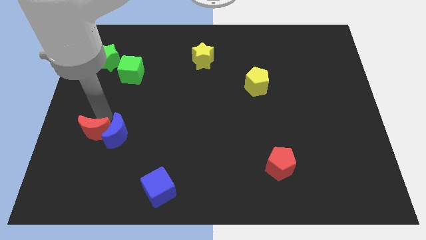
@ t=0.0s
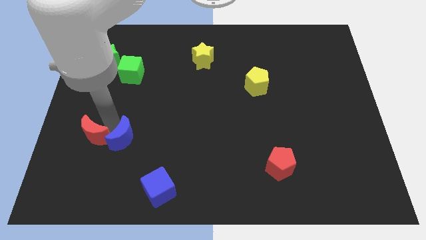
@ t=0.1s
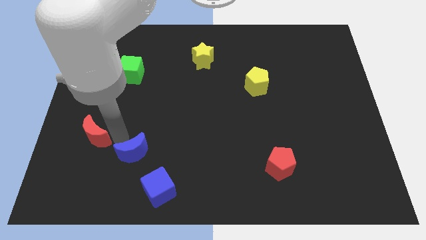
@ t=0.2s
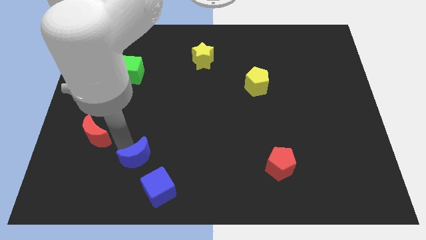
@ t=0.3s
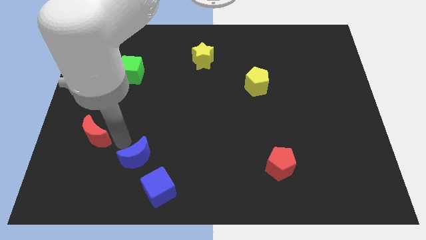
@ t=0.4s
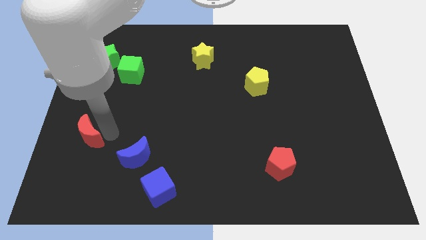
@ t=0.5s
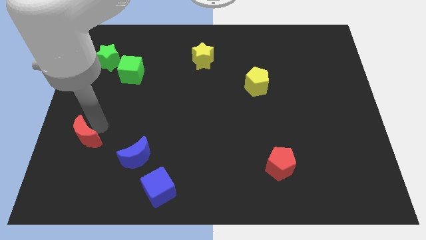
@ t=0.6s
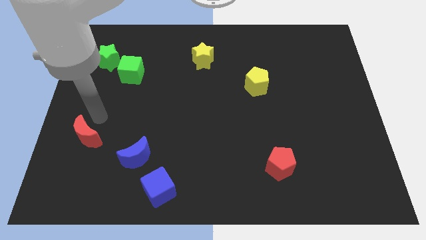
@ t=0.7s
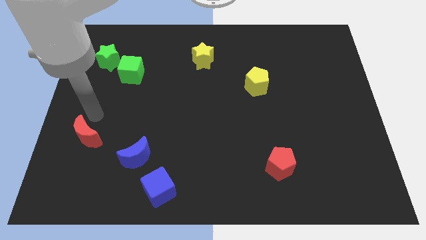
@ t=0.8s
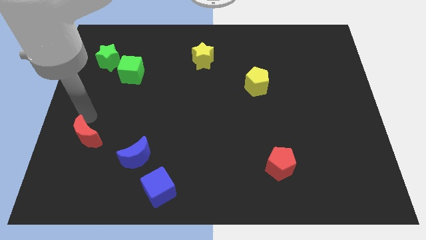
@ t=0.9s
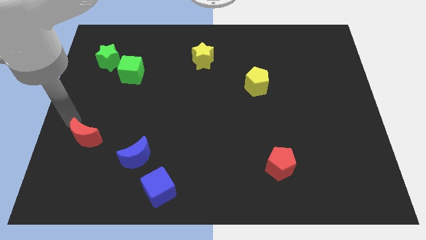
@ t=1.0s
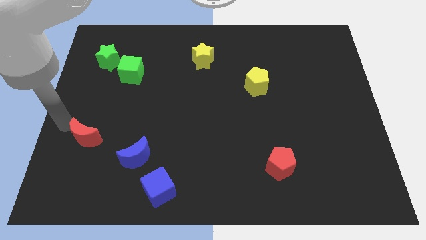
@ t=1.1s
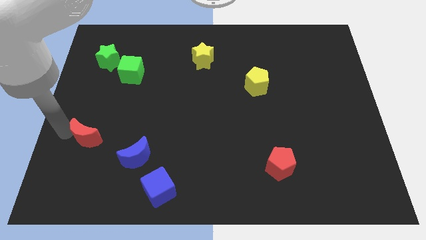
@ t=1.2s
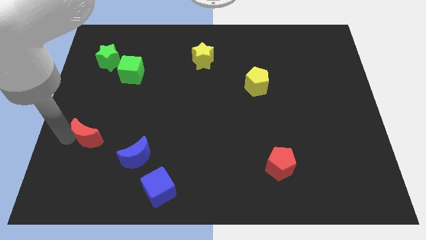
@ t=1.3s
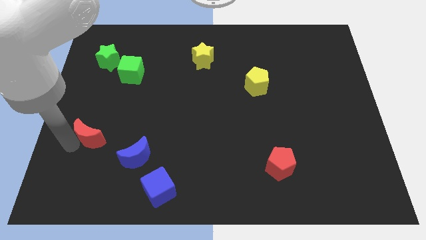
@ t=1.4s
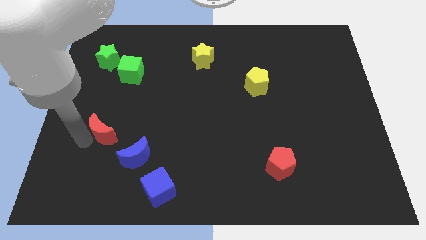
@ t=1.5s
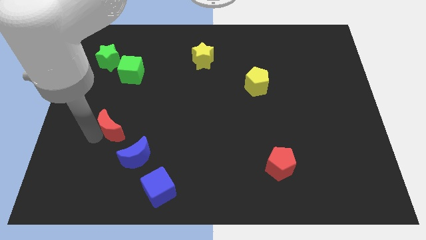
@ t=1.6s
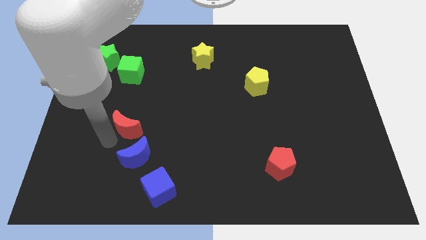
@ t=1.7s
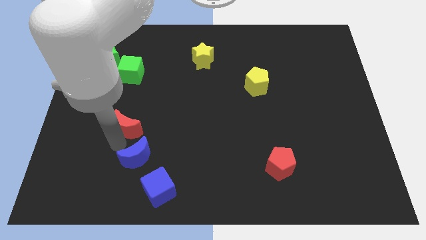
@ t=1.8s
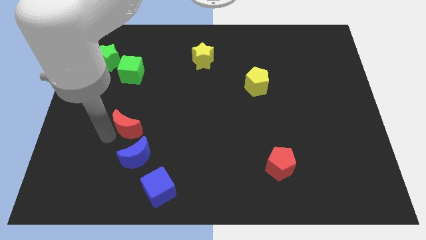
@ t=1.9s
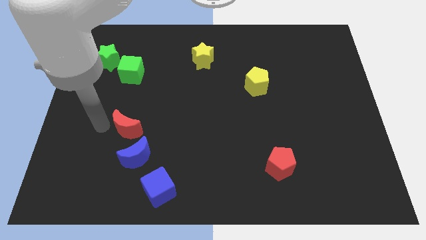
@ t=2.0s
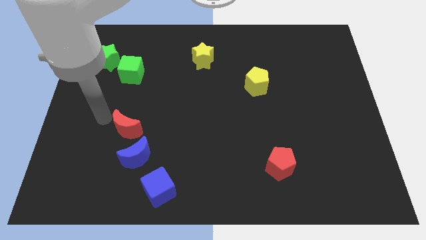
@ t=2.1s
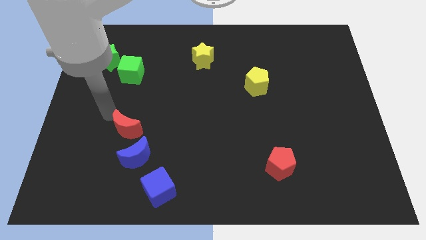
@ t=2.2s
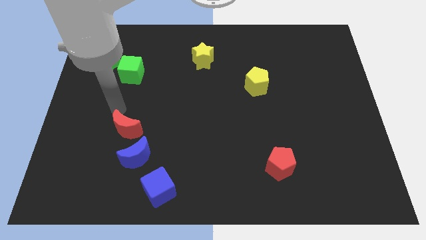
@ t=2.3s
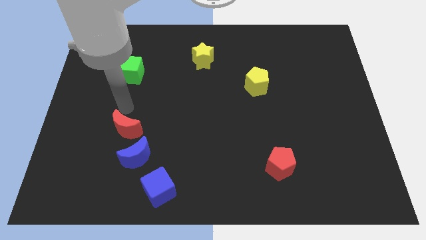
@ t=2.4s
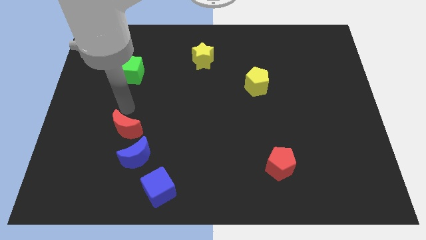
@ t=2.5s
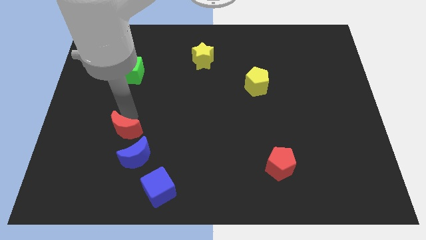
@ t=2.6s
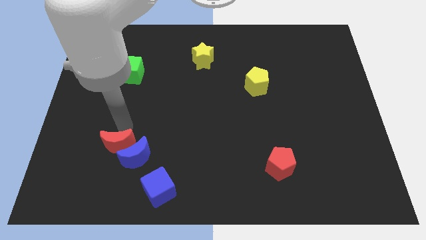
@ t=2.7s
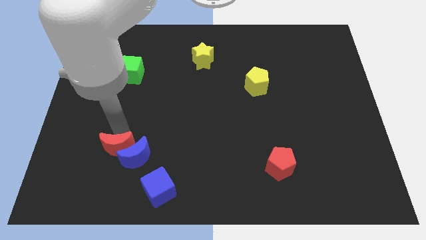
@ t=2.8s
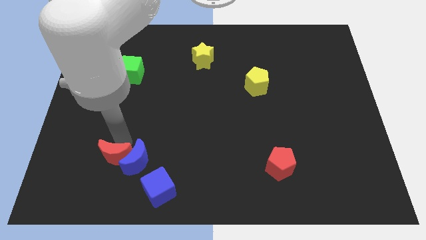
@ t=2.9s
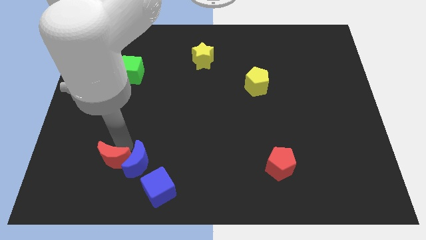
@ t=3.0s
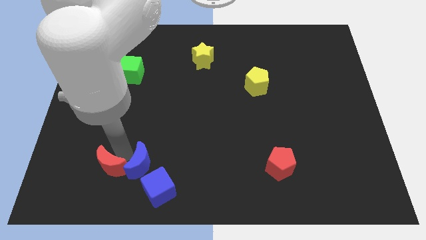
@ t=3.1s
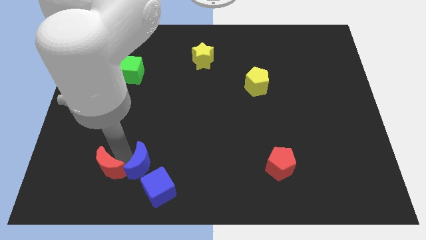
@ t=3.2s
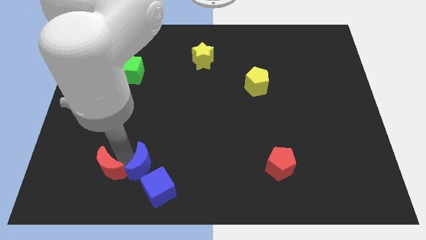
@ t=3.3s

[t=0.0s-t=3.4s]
move the blue crescent and the red moon towards the bottom

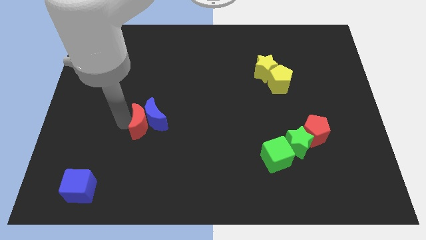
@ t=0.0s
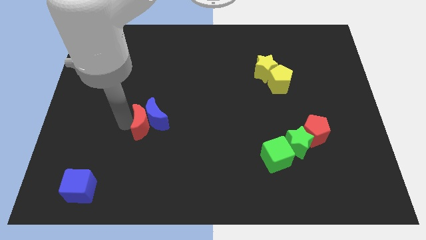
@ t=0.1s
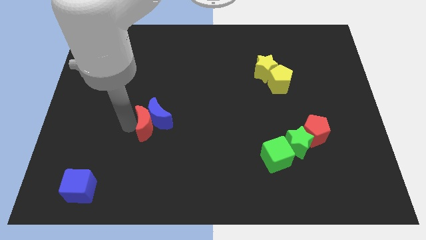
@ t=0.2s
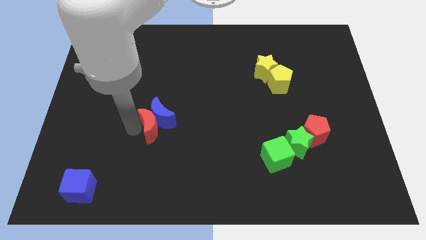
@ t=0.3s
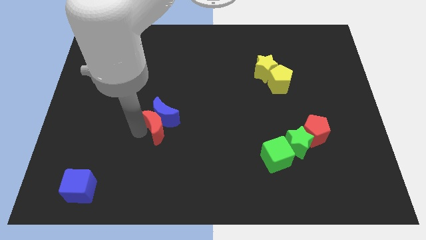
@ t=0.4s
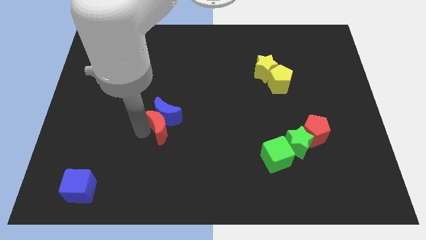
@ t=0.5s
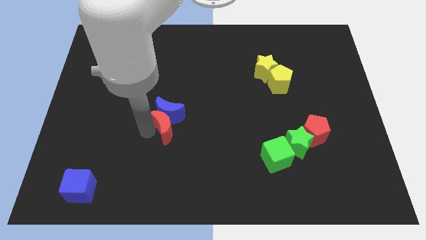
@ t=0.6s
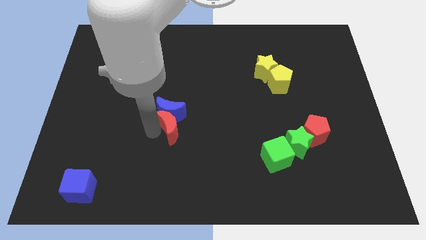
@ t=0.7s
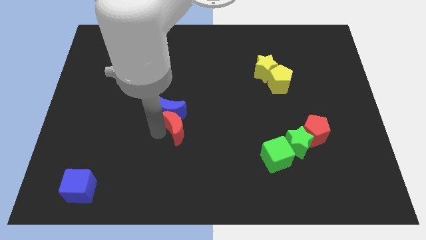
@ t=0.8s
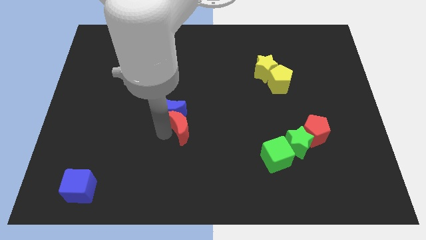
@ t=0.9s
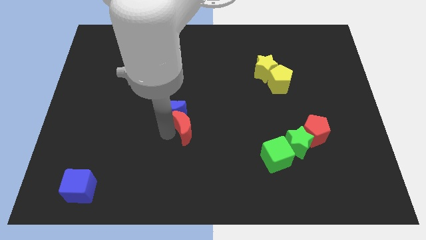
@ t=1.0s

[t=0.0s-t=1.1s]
move the red and blue moon towards center

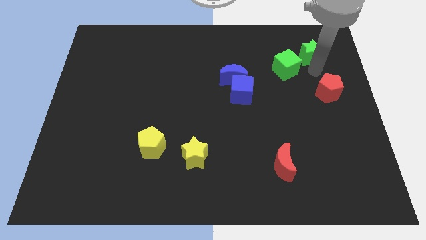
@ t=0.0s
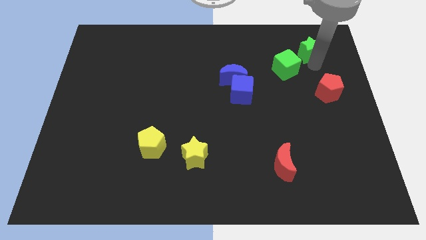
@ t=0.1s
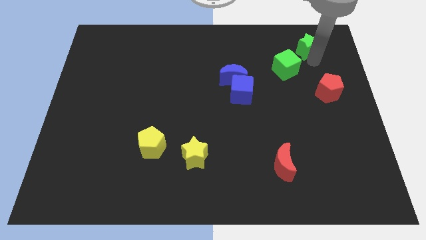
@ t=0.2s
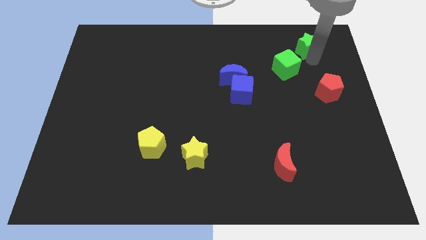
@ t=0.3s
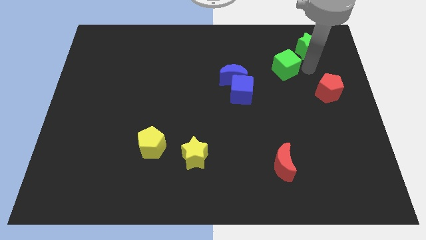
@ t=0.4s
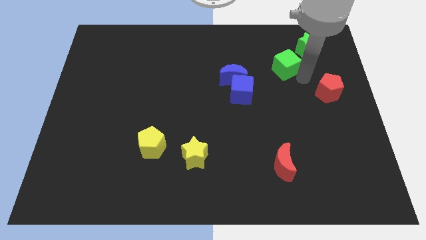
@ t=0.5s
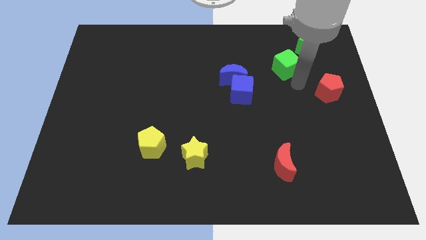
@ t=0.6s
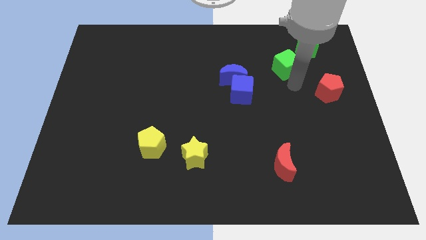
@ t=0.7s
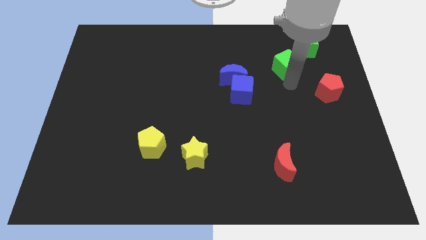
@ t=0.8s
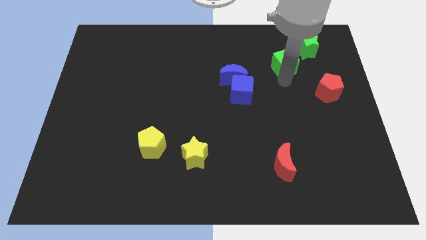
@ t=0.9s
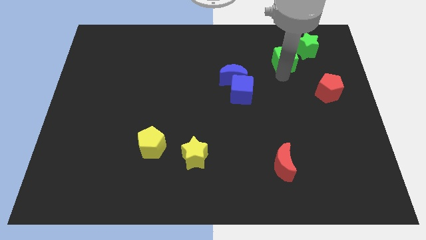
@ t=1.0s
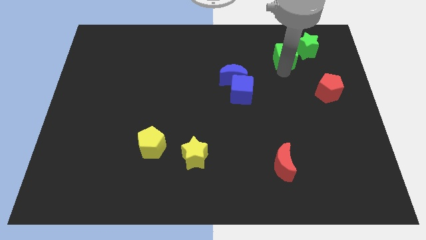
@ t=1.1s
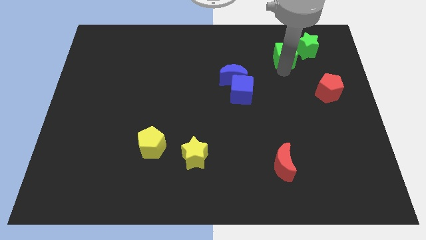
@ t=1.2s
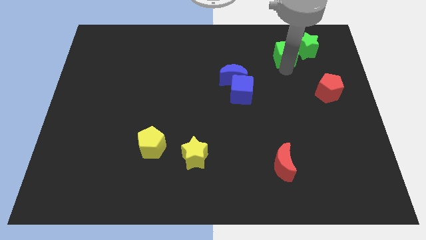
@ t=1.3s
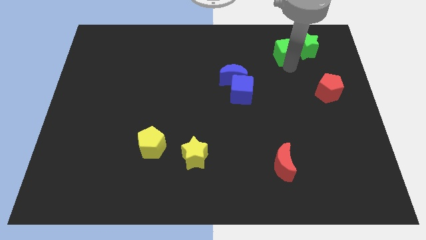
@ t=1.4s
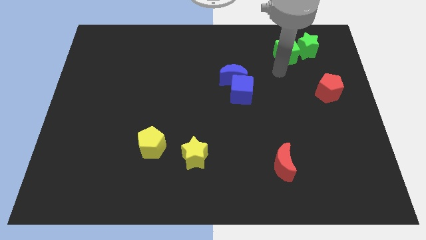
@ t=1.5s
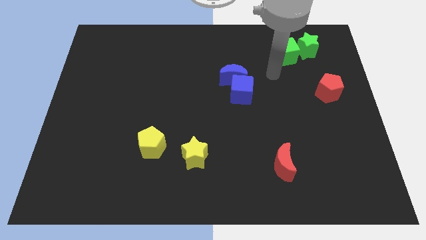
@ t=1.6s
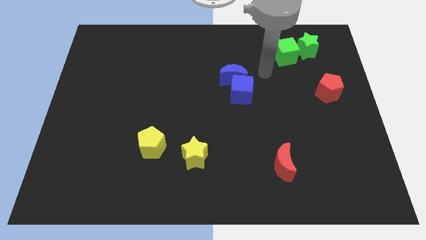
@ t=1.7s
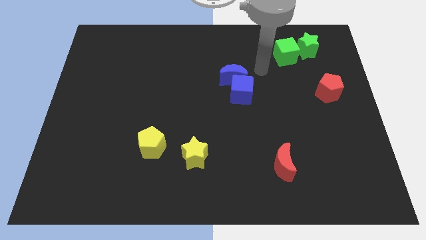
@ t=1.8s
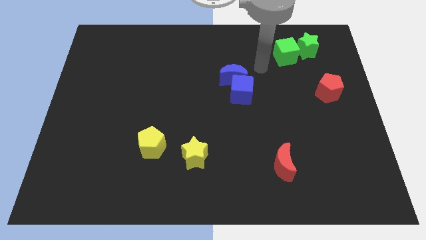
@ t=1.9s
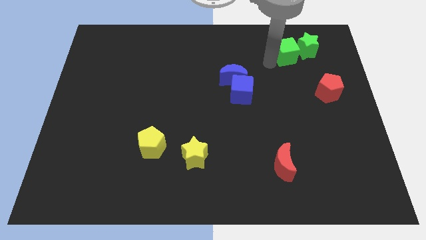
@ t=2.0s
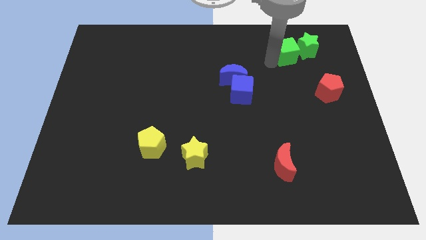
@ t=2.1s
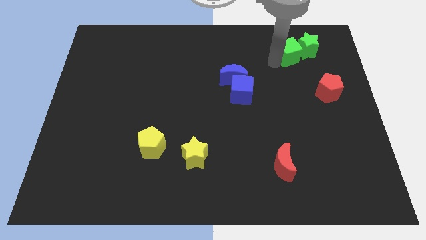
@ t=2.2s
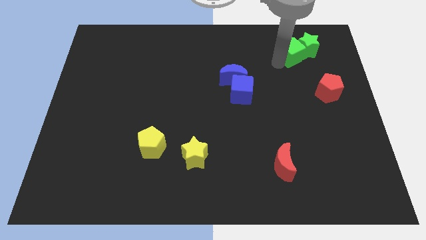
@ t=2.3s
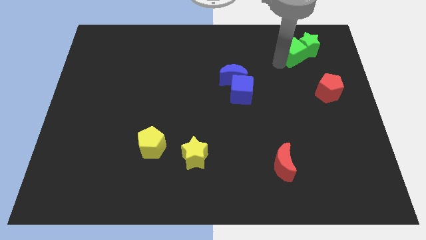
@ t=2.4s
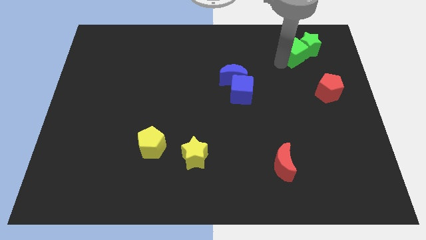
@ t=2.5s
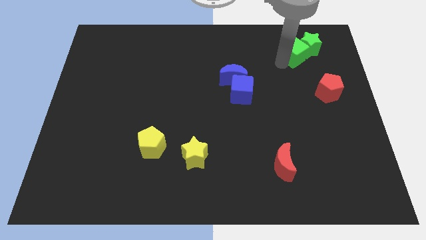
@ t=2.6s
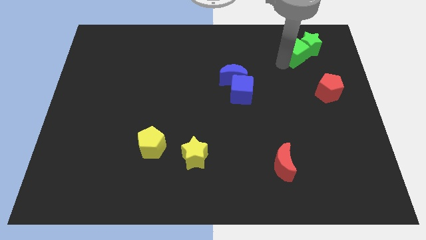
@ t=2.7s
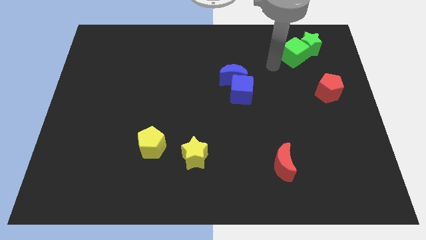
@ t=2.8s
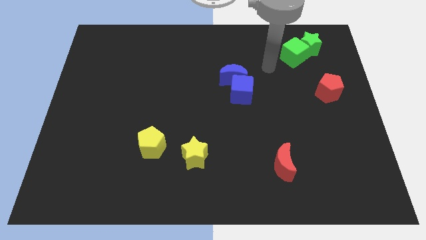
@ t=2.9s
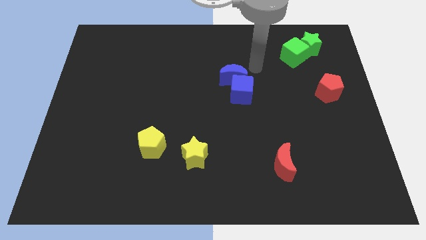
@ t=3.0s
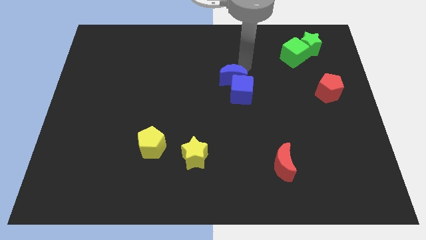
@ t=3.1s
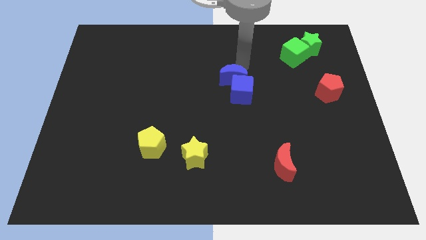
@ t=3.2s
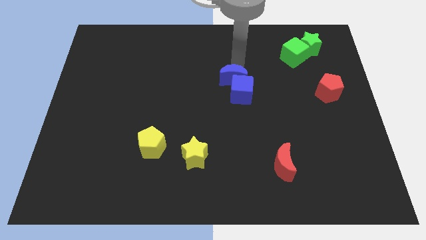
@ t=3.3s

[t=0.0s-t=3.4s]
push the green cube and green star to the top of the board

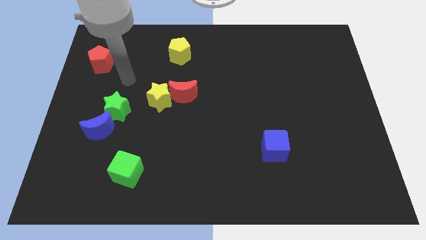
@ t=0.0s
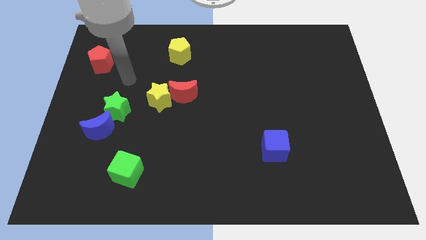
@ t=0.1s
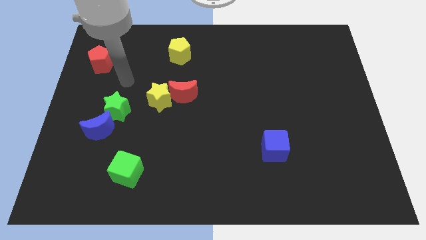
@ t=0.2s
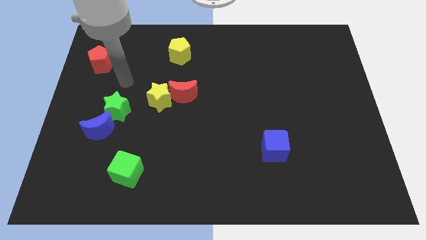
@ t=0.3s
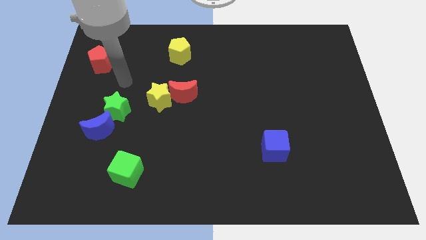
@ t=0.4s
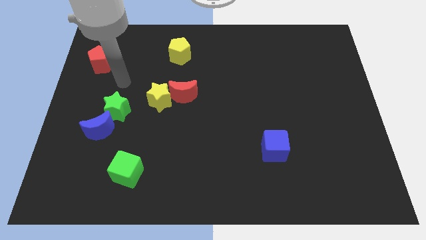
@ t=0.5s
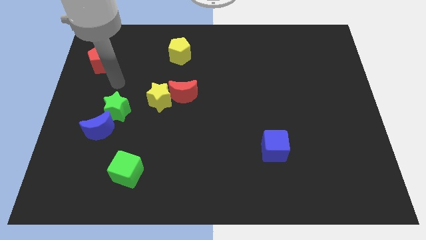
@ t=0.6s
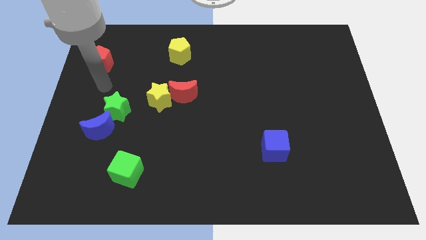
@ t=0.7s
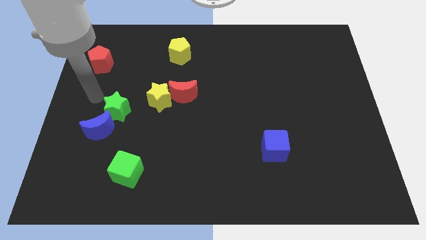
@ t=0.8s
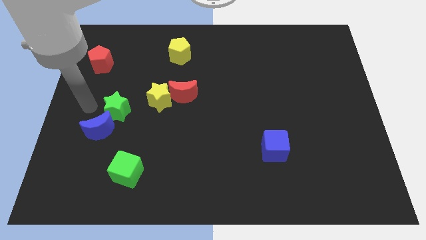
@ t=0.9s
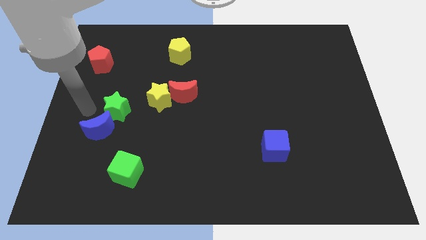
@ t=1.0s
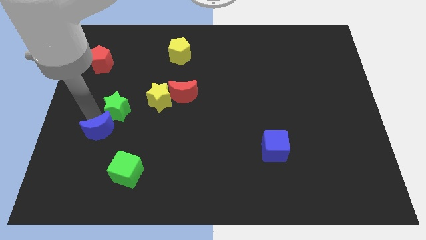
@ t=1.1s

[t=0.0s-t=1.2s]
move your arm towards the blue crescent
